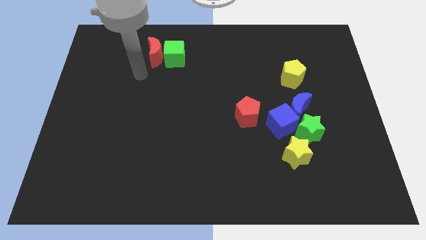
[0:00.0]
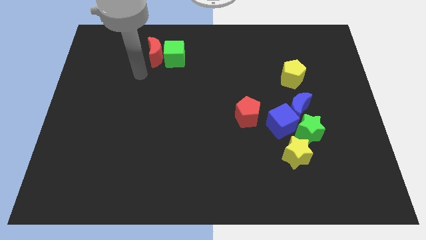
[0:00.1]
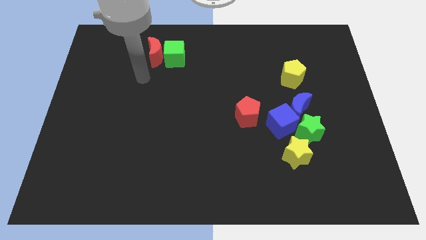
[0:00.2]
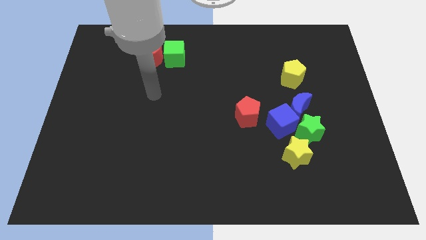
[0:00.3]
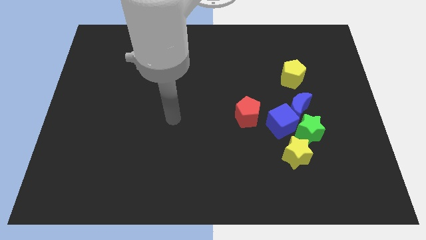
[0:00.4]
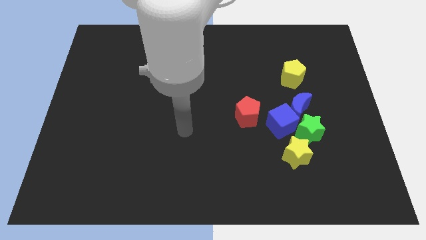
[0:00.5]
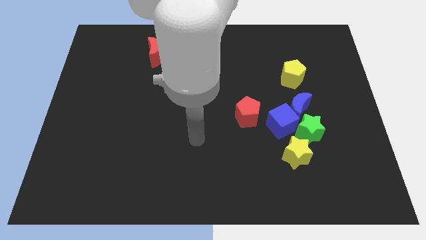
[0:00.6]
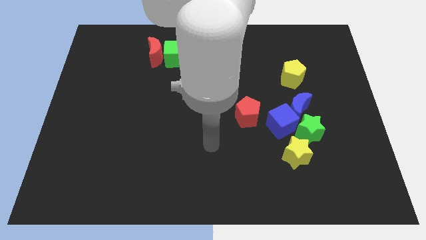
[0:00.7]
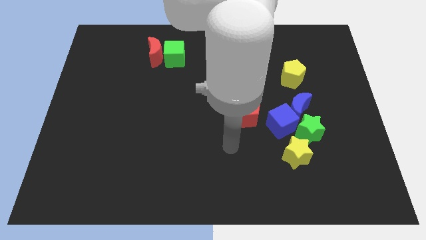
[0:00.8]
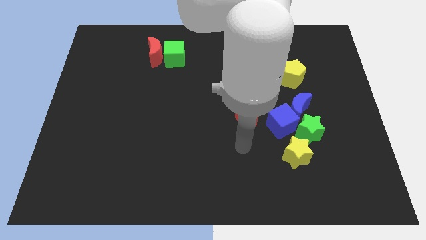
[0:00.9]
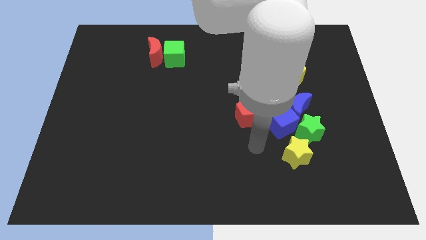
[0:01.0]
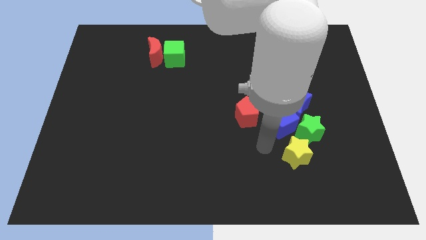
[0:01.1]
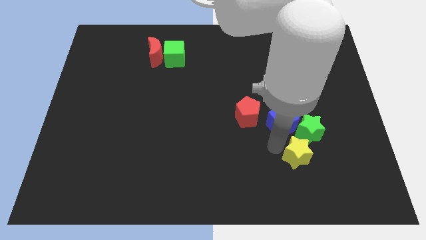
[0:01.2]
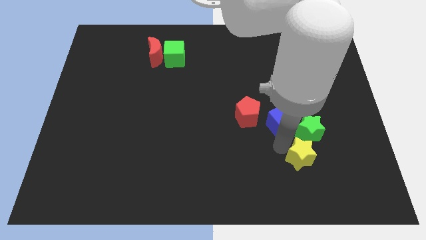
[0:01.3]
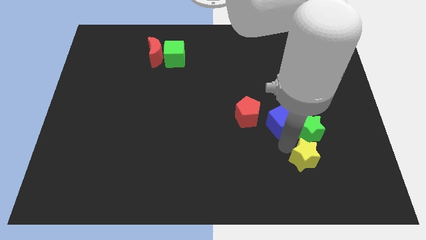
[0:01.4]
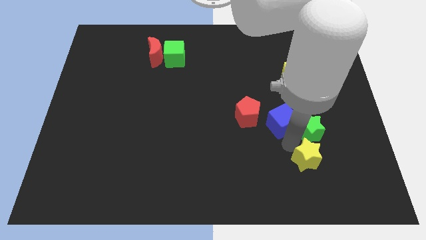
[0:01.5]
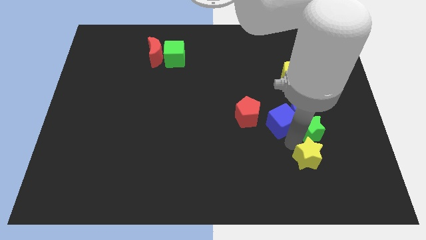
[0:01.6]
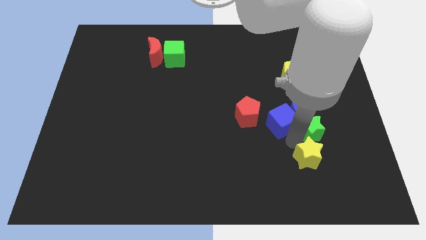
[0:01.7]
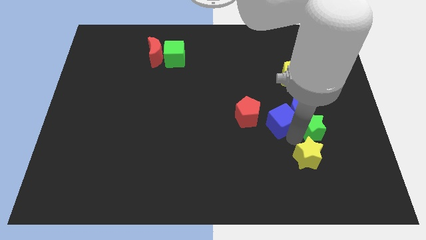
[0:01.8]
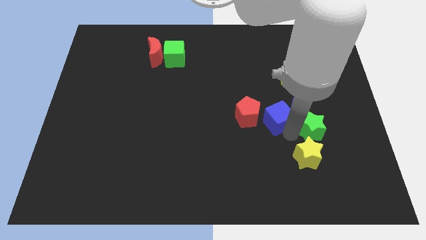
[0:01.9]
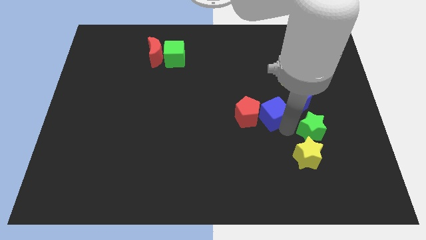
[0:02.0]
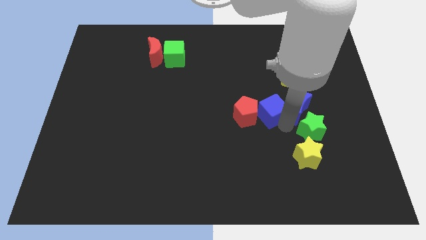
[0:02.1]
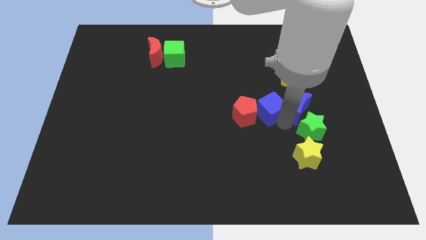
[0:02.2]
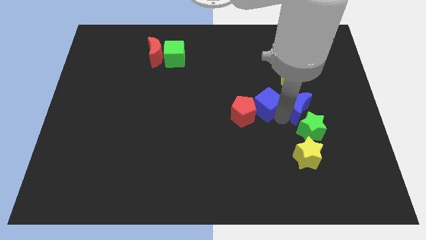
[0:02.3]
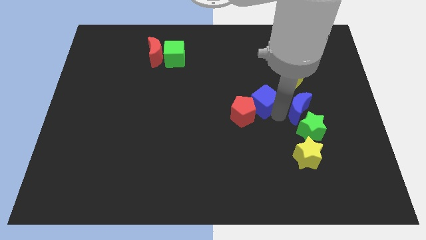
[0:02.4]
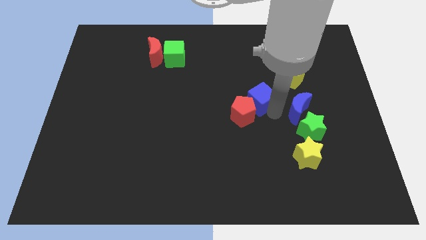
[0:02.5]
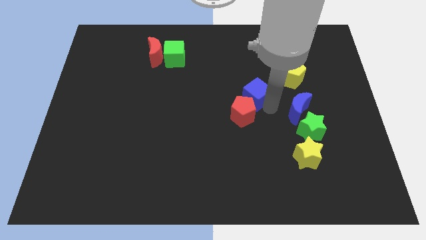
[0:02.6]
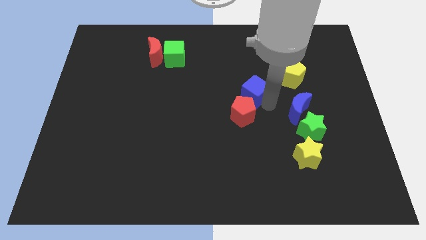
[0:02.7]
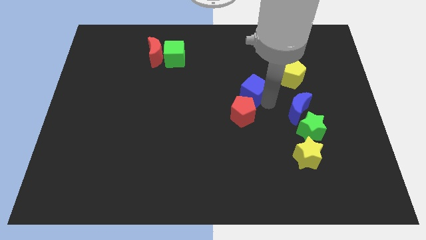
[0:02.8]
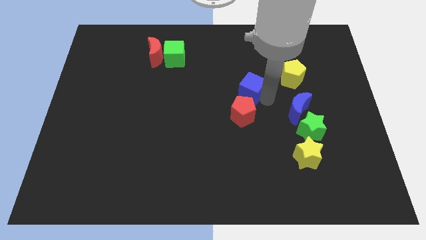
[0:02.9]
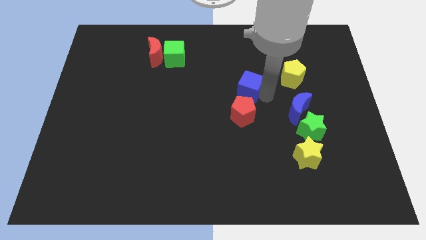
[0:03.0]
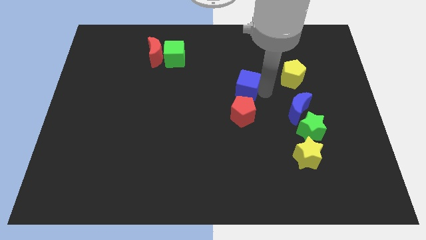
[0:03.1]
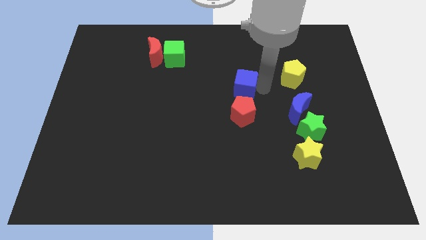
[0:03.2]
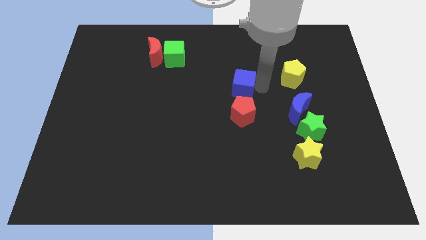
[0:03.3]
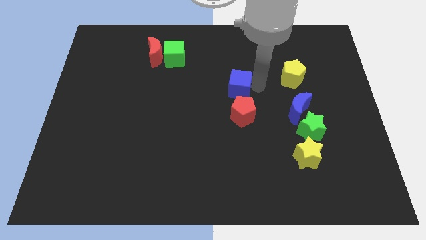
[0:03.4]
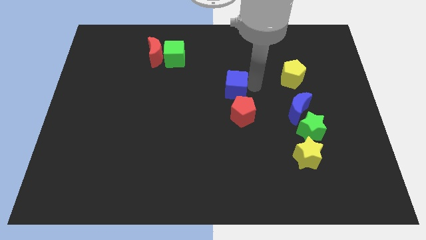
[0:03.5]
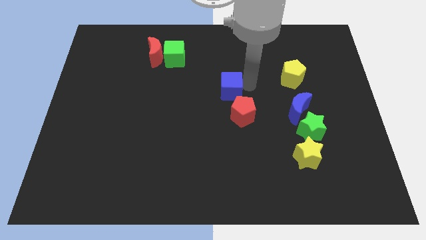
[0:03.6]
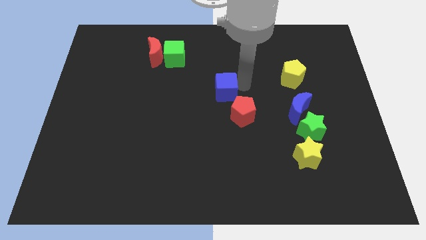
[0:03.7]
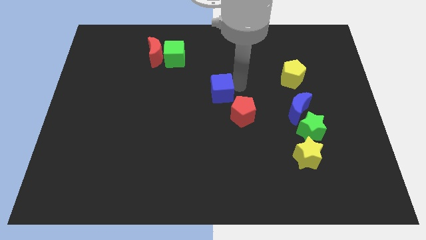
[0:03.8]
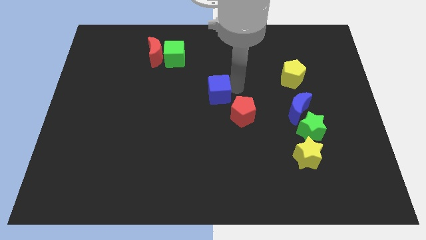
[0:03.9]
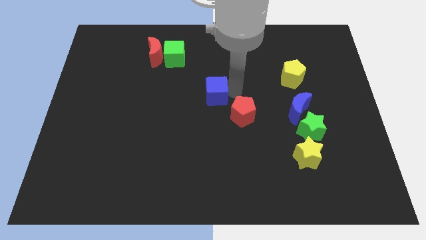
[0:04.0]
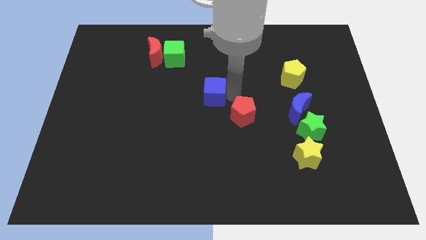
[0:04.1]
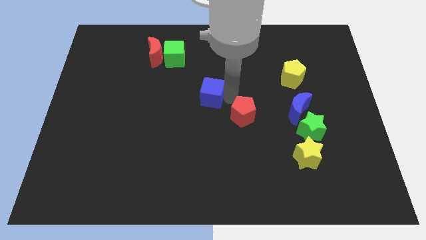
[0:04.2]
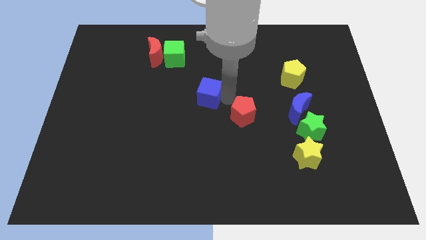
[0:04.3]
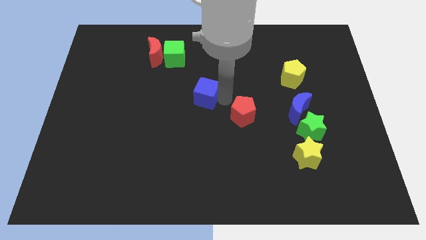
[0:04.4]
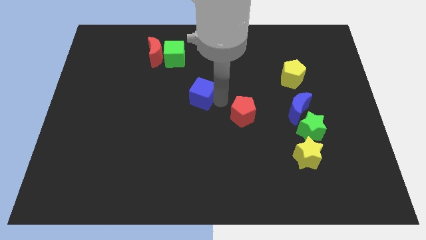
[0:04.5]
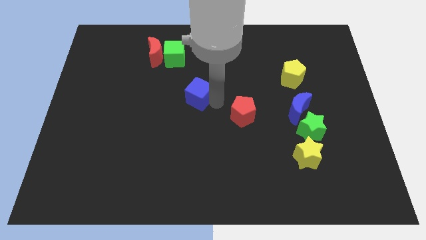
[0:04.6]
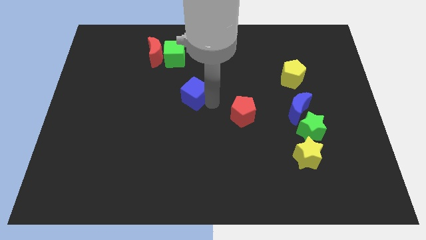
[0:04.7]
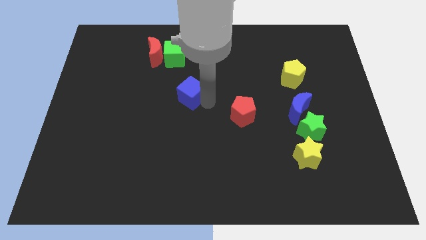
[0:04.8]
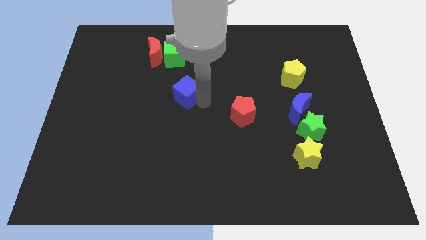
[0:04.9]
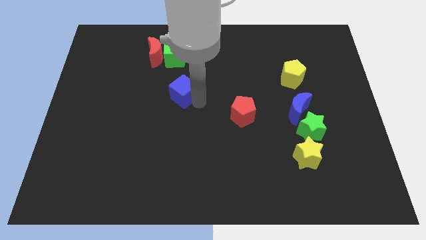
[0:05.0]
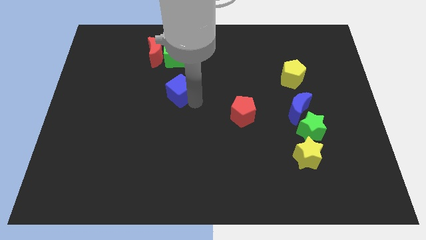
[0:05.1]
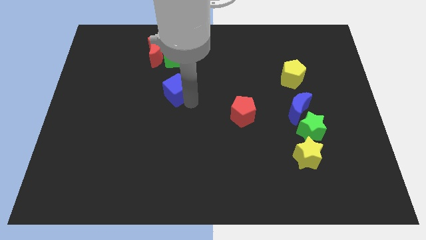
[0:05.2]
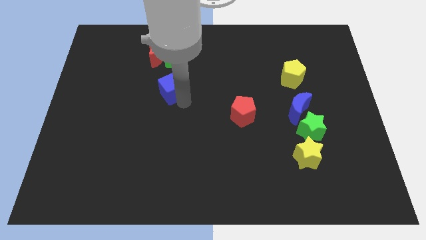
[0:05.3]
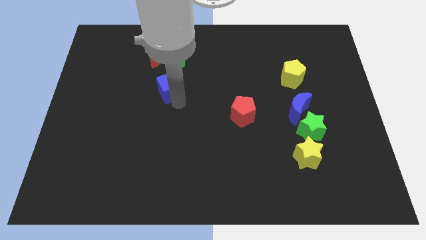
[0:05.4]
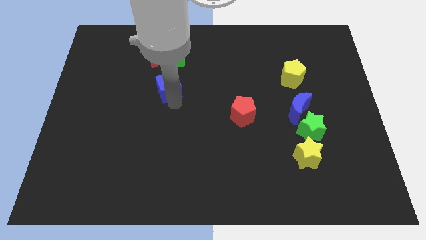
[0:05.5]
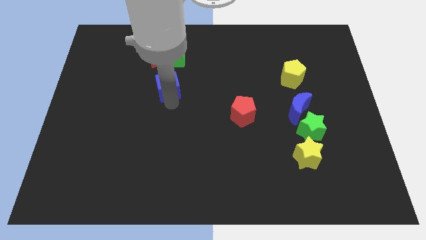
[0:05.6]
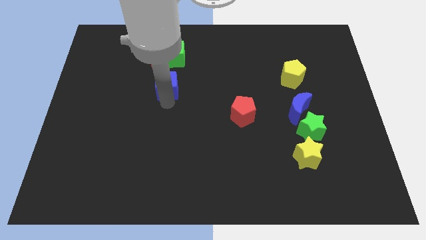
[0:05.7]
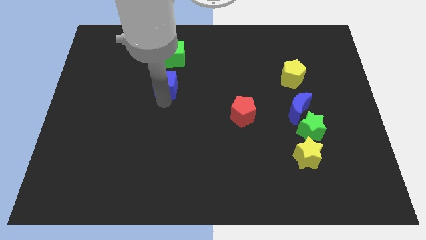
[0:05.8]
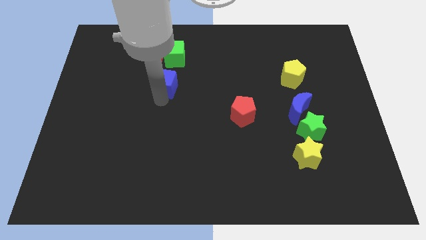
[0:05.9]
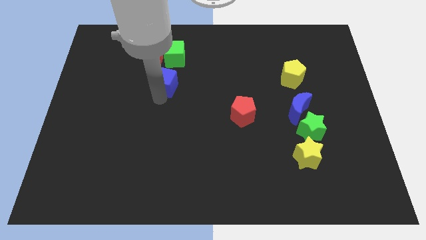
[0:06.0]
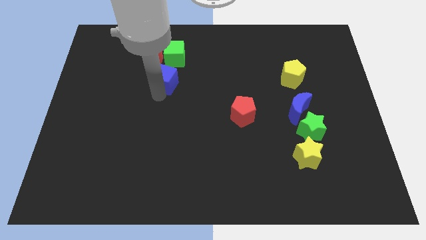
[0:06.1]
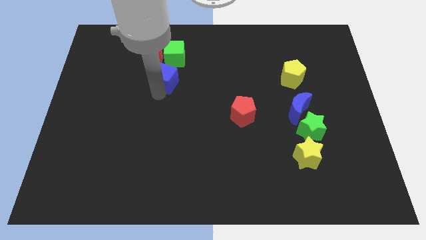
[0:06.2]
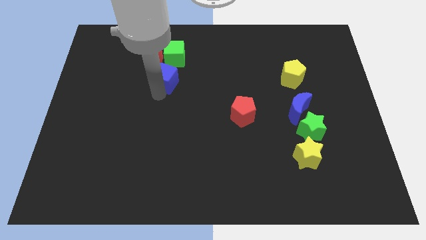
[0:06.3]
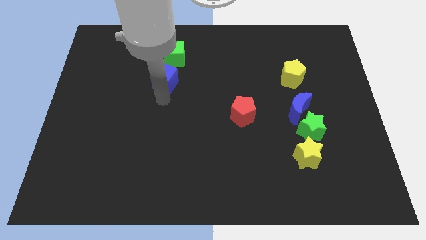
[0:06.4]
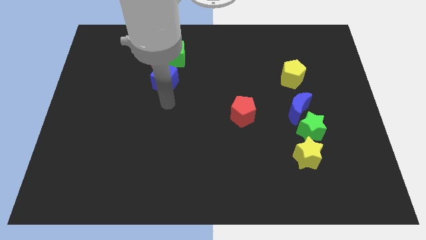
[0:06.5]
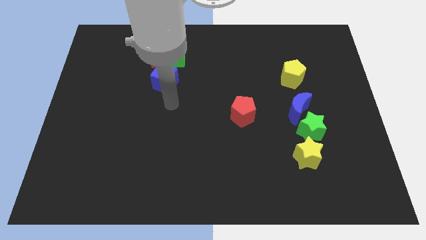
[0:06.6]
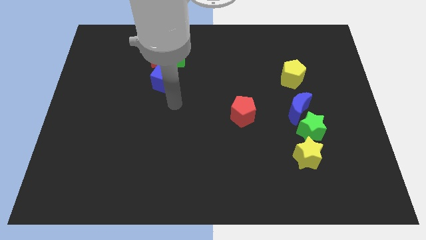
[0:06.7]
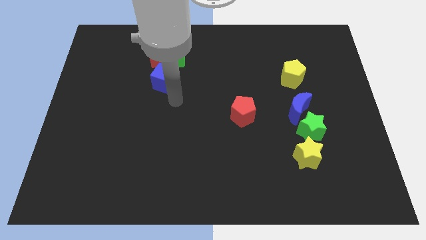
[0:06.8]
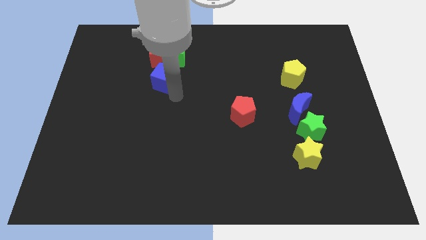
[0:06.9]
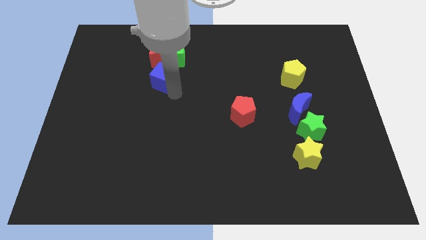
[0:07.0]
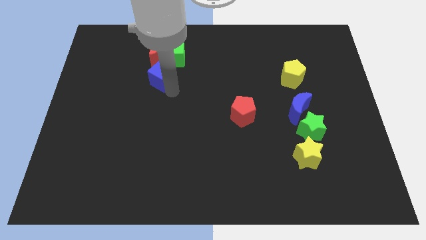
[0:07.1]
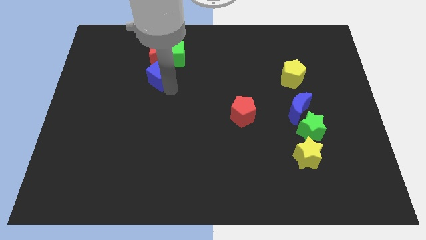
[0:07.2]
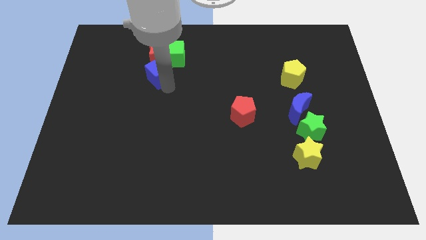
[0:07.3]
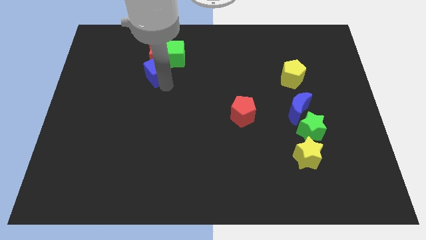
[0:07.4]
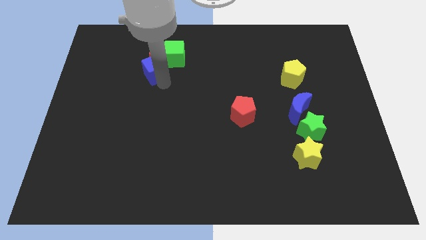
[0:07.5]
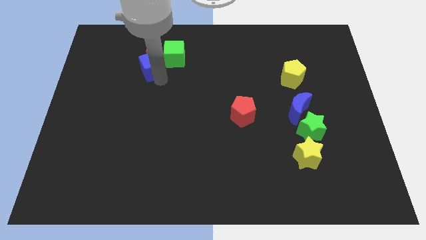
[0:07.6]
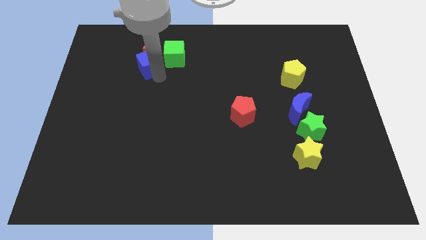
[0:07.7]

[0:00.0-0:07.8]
put the blue cube next to the red moon

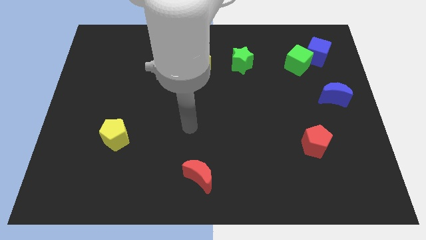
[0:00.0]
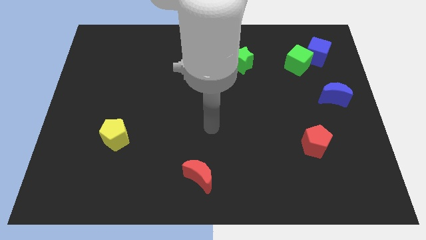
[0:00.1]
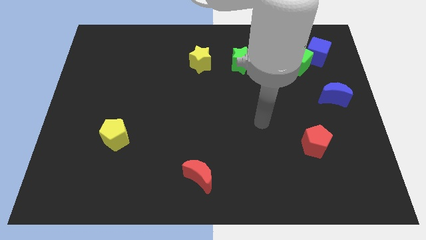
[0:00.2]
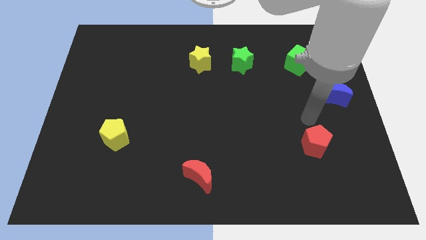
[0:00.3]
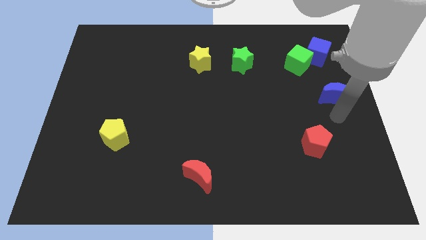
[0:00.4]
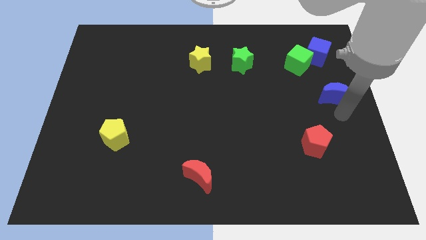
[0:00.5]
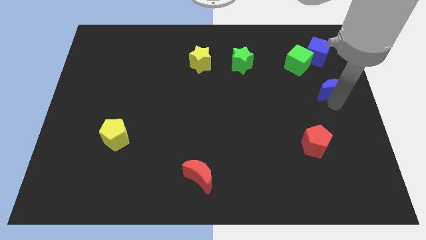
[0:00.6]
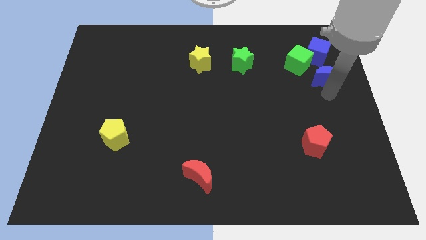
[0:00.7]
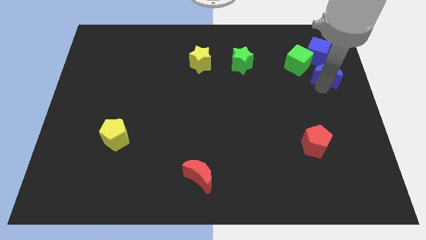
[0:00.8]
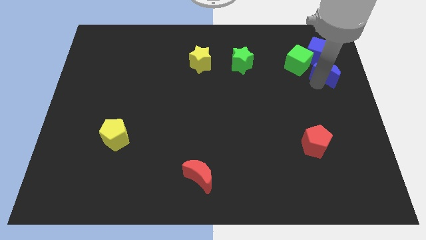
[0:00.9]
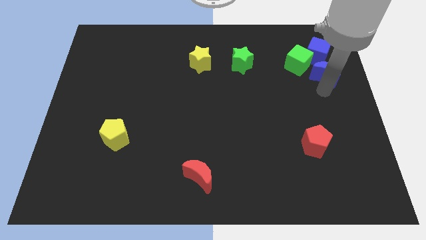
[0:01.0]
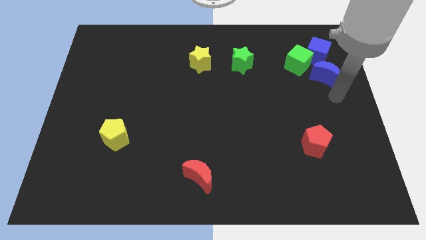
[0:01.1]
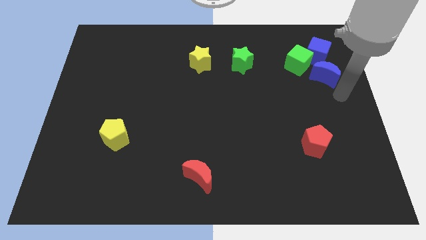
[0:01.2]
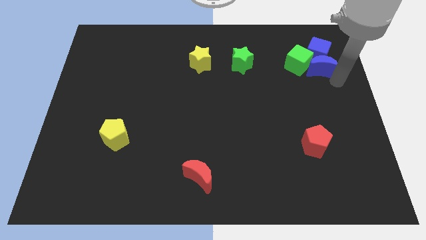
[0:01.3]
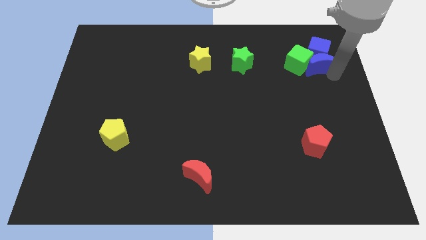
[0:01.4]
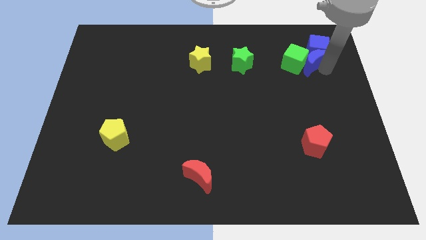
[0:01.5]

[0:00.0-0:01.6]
push the blue moon close to the green cube
